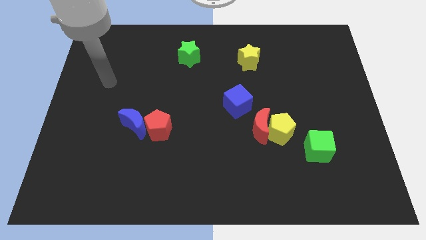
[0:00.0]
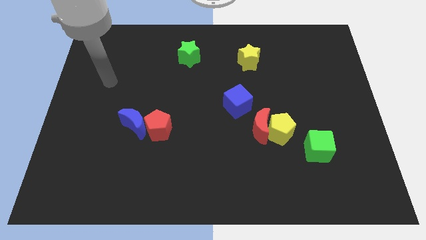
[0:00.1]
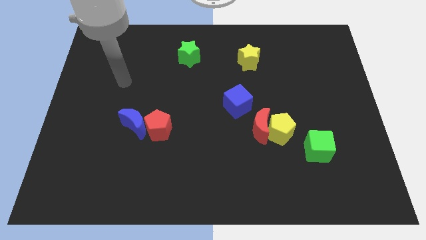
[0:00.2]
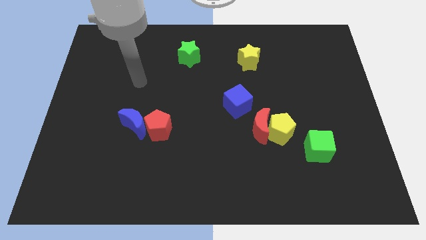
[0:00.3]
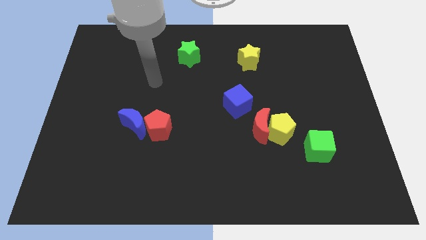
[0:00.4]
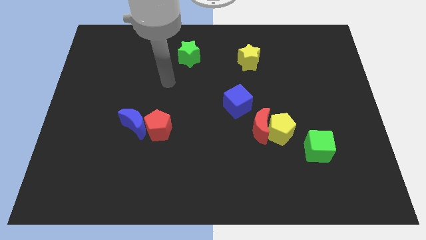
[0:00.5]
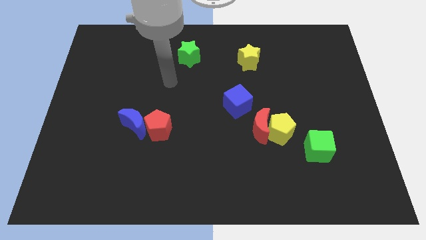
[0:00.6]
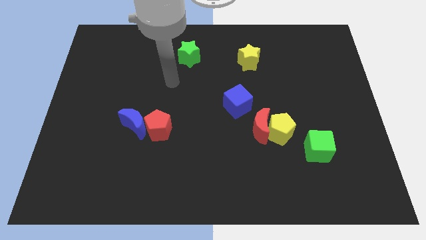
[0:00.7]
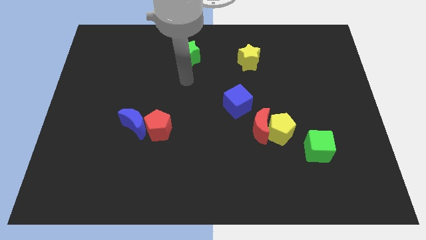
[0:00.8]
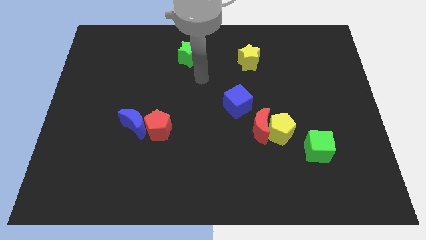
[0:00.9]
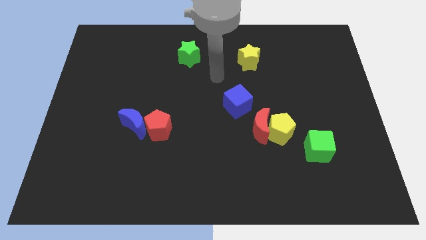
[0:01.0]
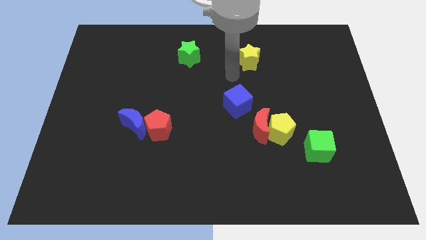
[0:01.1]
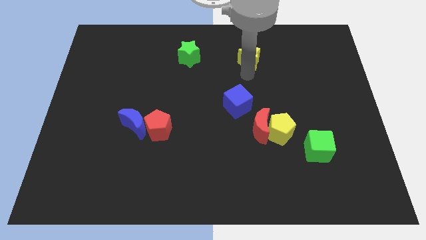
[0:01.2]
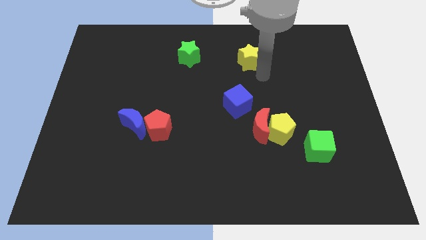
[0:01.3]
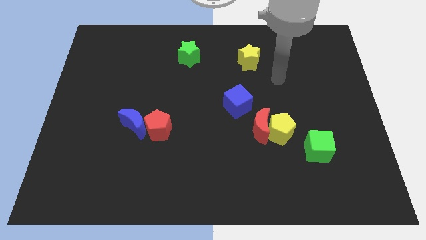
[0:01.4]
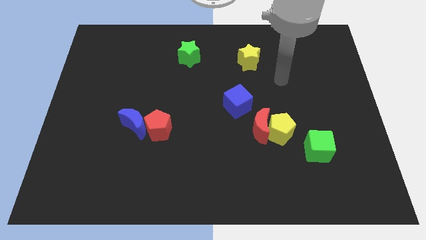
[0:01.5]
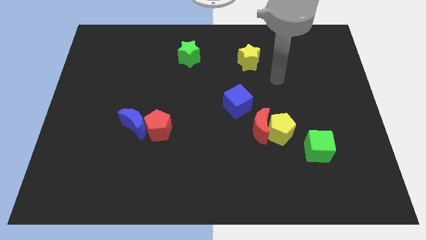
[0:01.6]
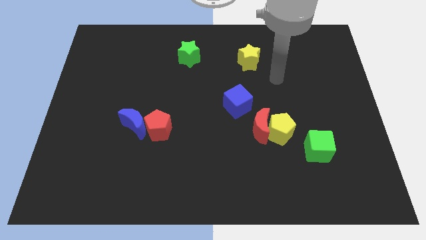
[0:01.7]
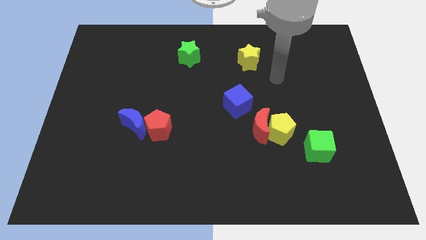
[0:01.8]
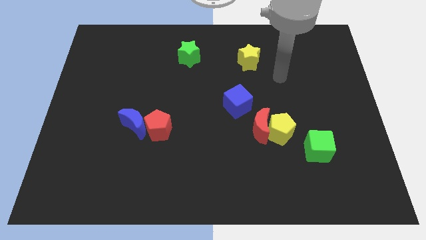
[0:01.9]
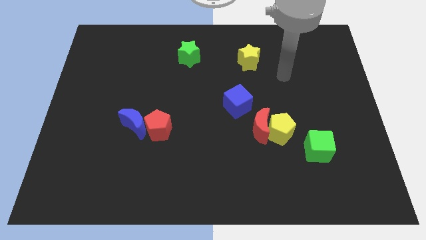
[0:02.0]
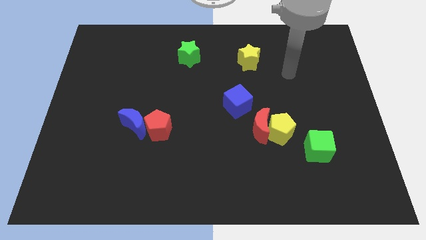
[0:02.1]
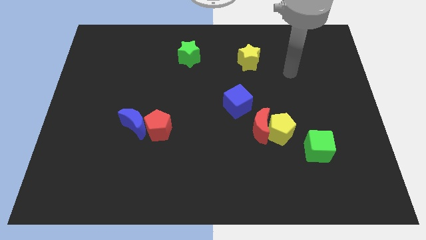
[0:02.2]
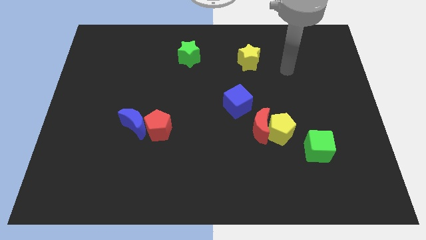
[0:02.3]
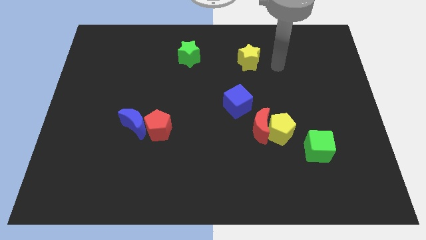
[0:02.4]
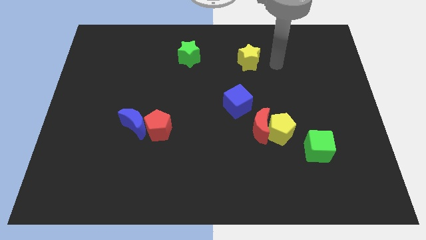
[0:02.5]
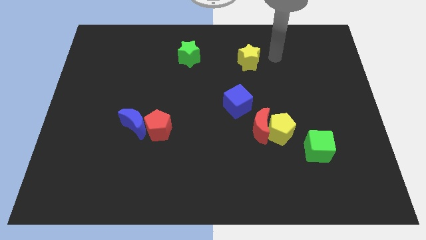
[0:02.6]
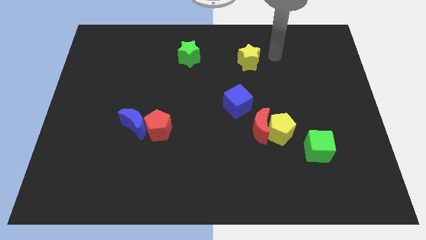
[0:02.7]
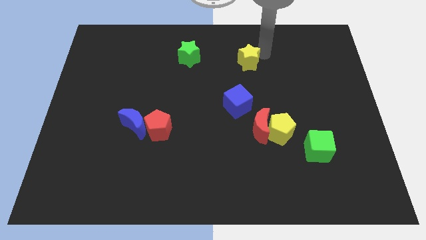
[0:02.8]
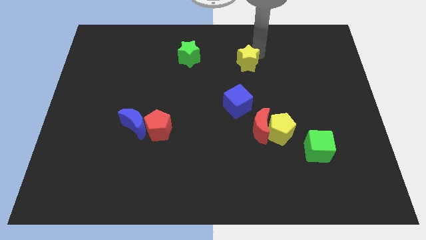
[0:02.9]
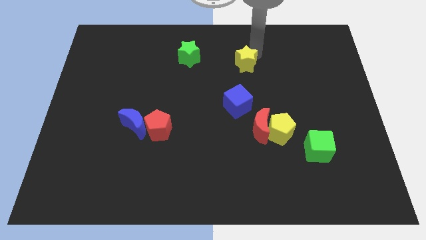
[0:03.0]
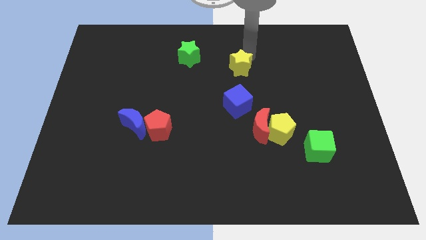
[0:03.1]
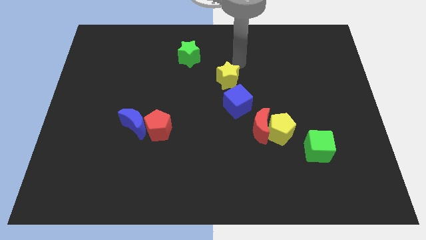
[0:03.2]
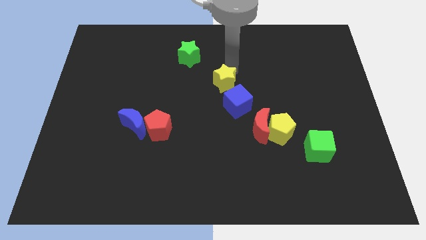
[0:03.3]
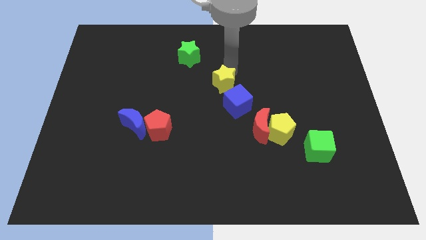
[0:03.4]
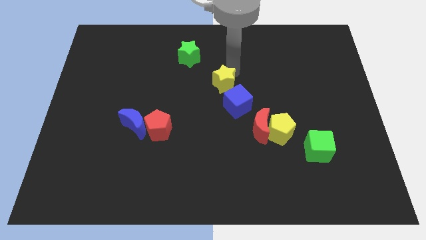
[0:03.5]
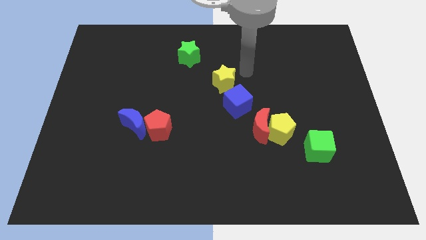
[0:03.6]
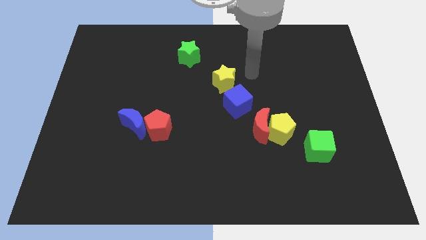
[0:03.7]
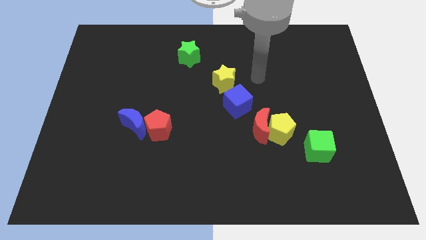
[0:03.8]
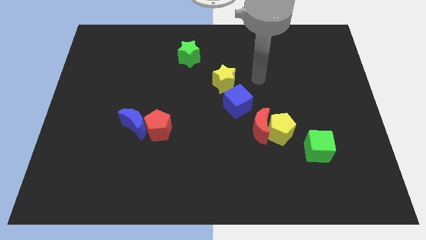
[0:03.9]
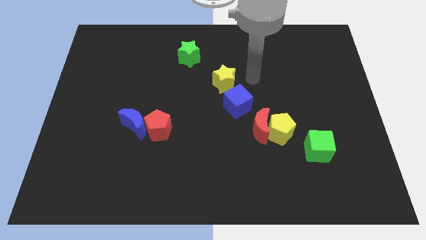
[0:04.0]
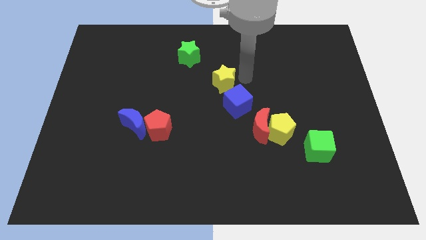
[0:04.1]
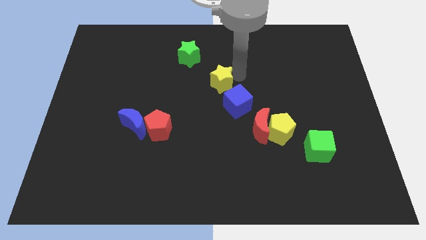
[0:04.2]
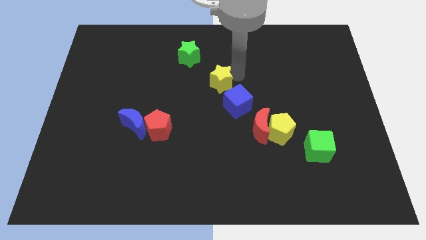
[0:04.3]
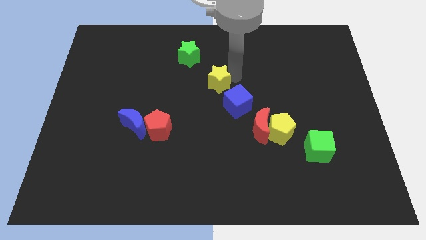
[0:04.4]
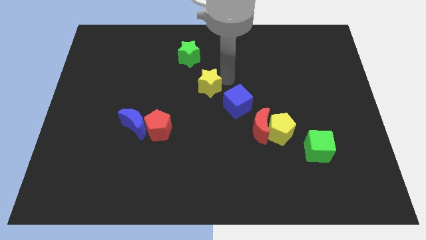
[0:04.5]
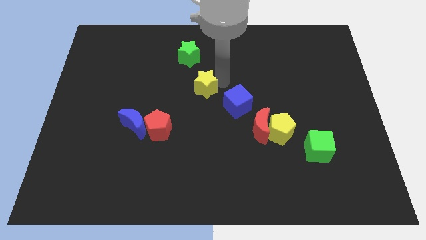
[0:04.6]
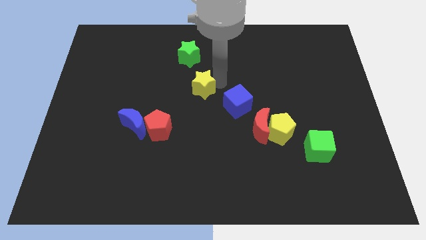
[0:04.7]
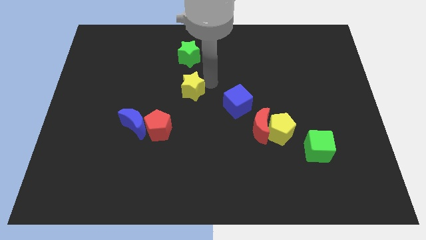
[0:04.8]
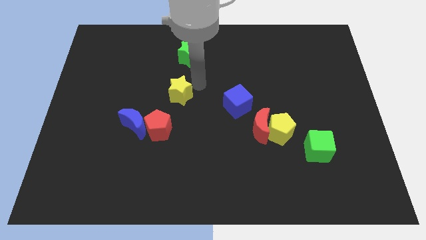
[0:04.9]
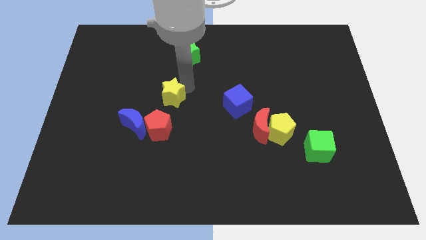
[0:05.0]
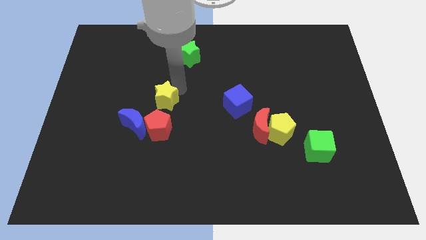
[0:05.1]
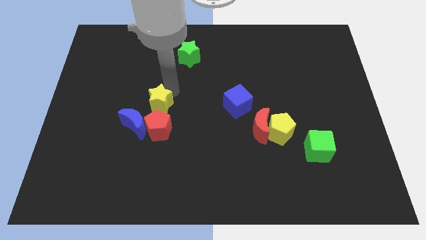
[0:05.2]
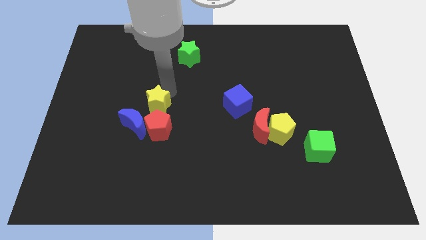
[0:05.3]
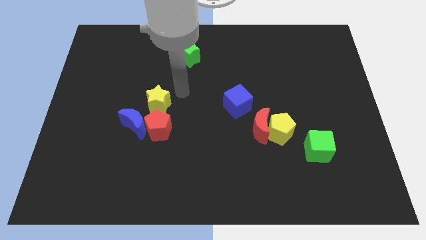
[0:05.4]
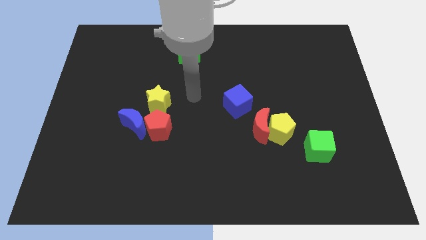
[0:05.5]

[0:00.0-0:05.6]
place the yellow star above the red pentagon

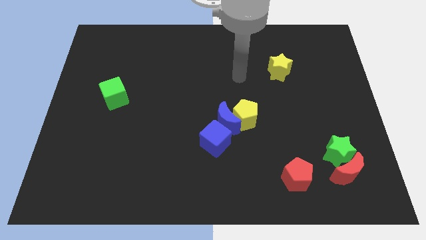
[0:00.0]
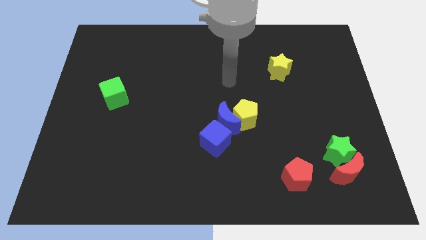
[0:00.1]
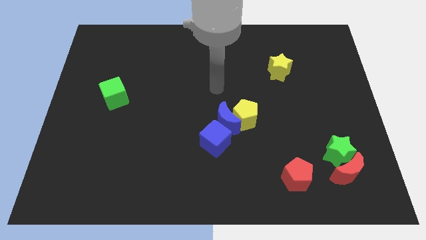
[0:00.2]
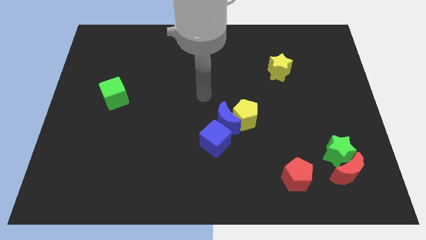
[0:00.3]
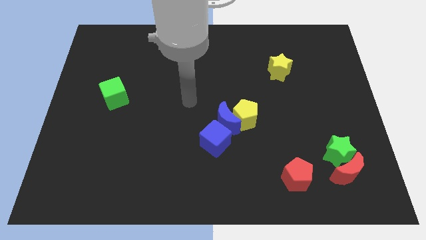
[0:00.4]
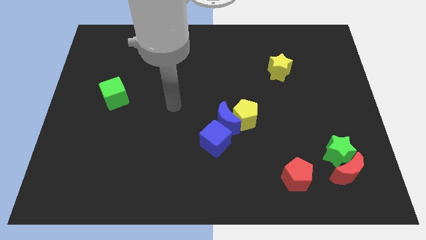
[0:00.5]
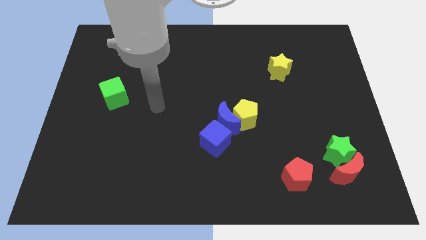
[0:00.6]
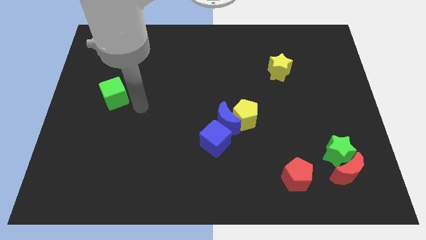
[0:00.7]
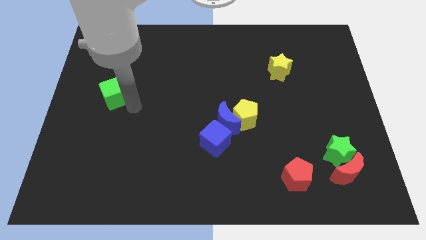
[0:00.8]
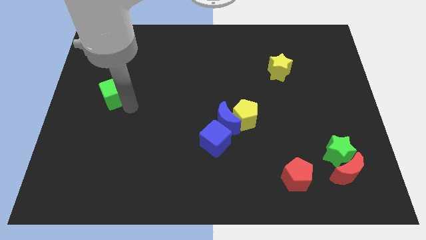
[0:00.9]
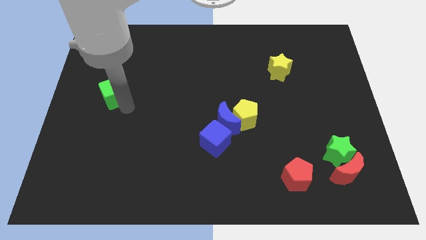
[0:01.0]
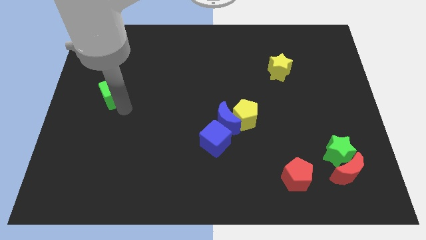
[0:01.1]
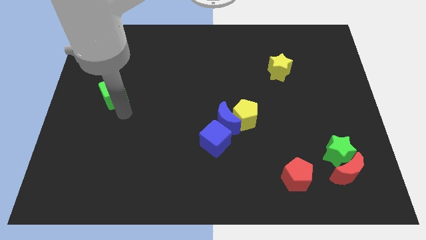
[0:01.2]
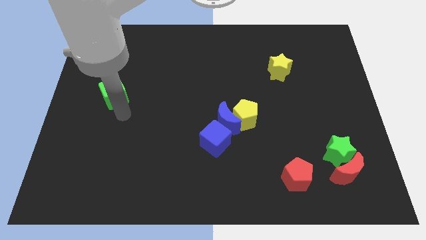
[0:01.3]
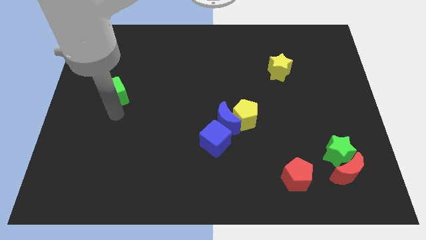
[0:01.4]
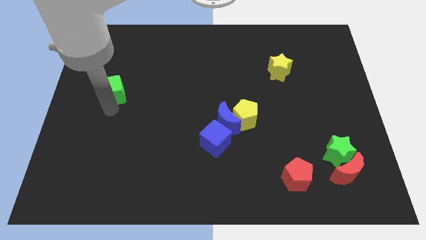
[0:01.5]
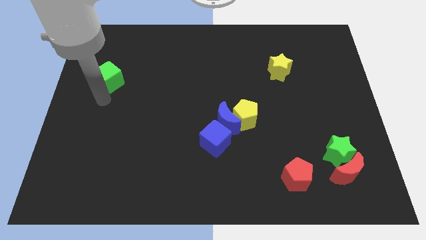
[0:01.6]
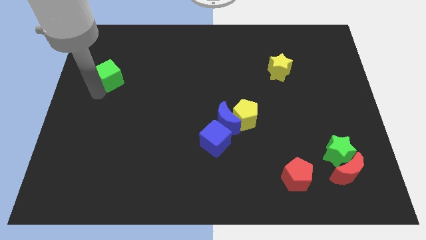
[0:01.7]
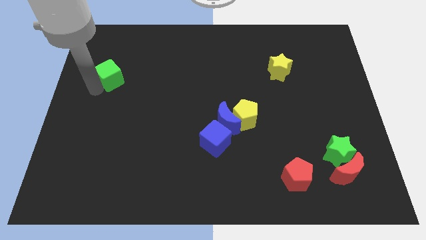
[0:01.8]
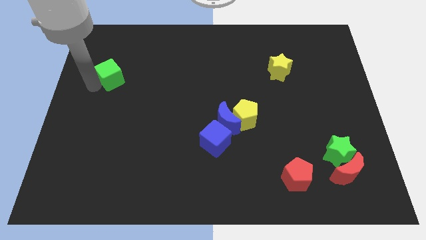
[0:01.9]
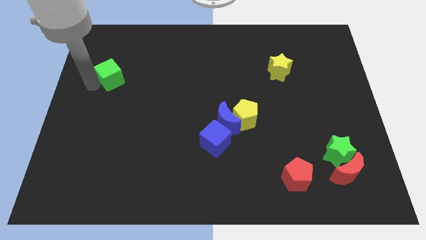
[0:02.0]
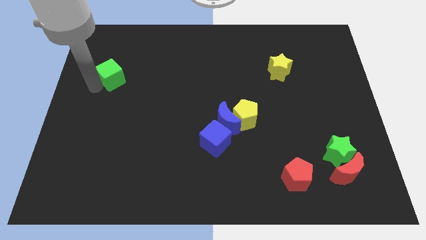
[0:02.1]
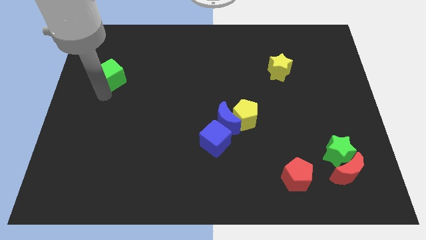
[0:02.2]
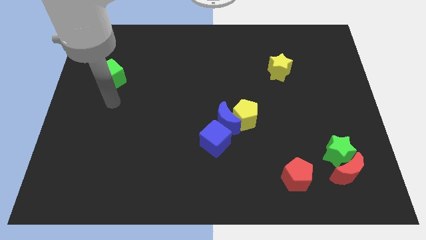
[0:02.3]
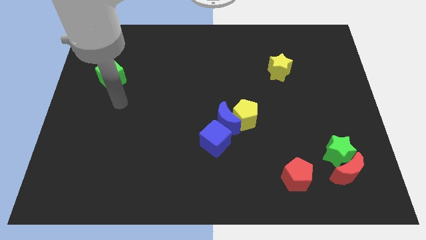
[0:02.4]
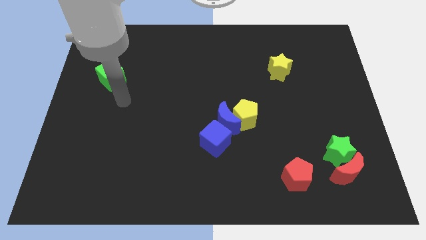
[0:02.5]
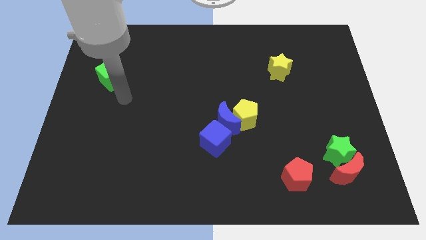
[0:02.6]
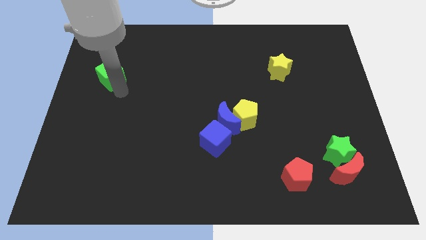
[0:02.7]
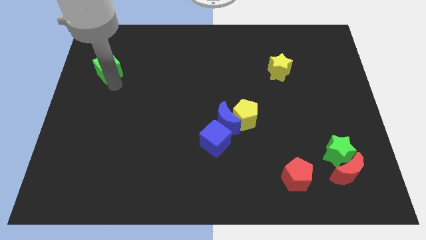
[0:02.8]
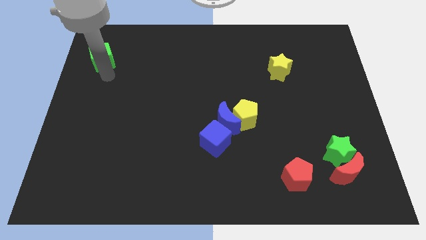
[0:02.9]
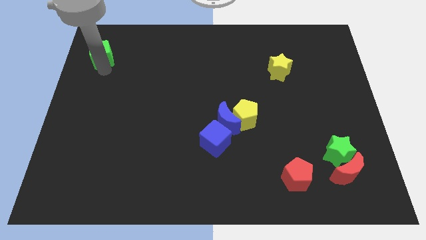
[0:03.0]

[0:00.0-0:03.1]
move the green cube towards the top left of the board

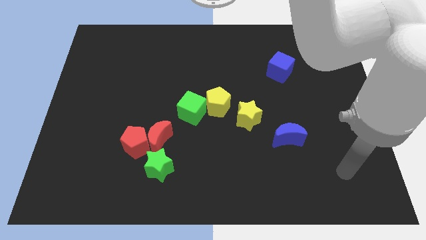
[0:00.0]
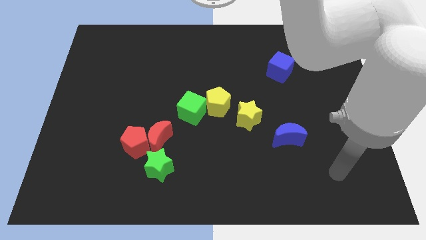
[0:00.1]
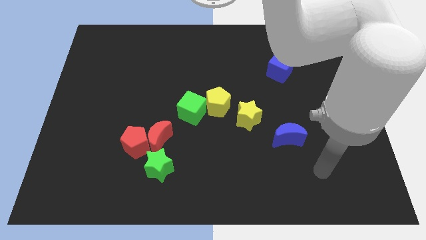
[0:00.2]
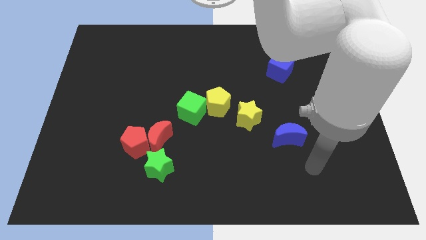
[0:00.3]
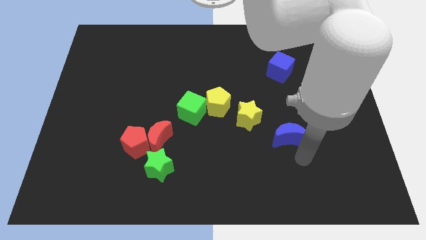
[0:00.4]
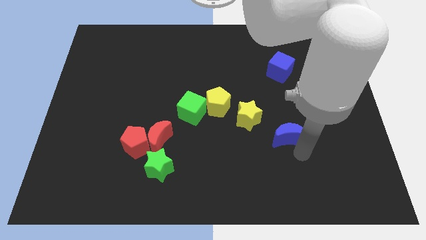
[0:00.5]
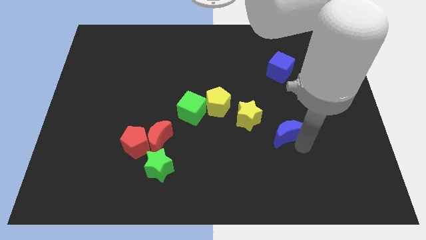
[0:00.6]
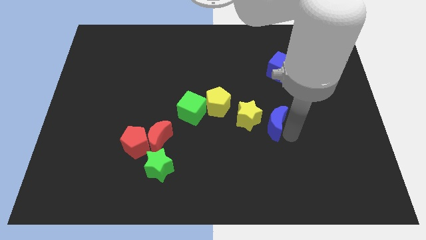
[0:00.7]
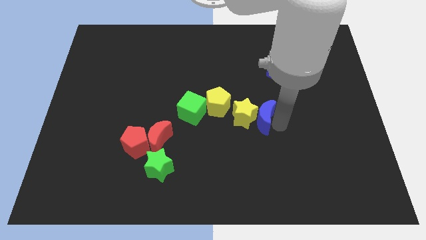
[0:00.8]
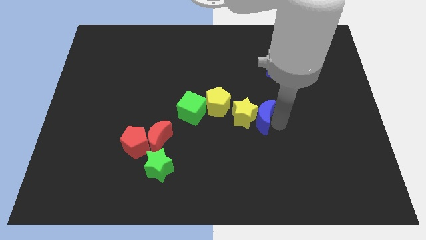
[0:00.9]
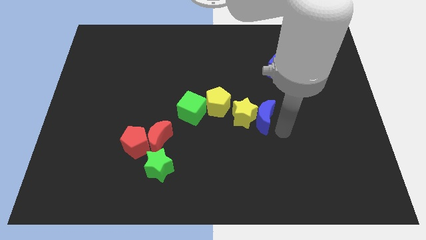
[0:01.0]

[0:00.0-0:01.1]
push the blue crescent to the right of the yellow star
